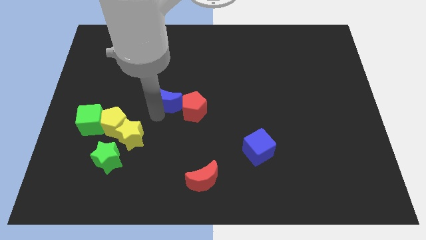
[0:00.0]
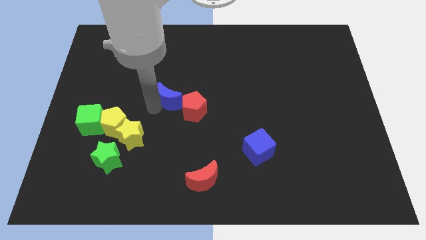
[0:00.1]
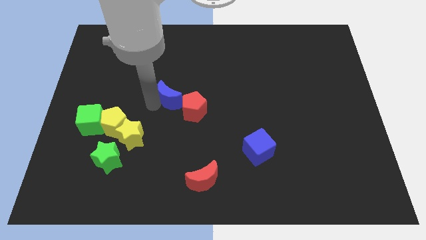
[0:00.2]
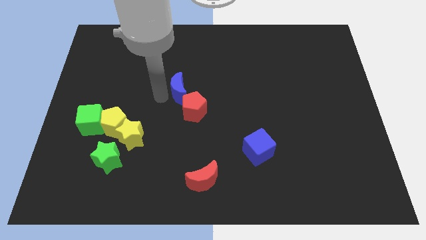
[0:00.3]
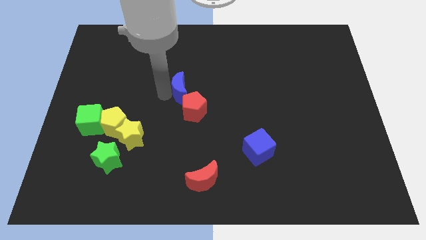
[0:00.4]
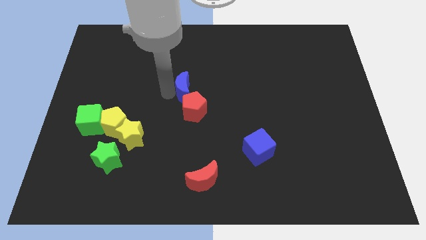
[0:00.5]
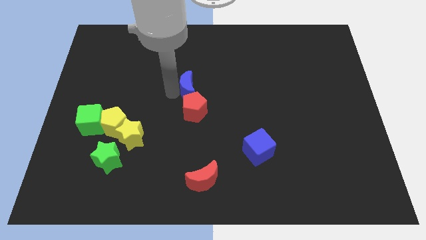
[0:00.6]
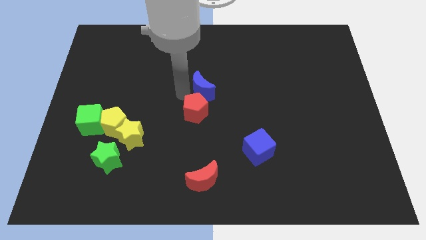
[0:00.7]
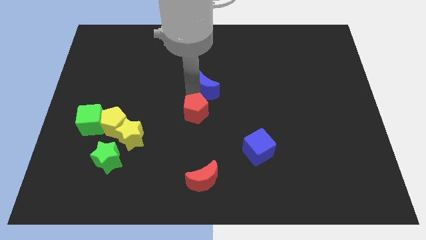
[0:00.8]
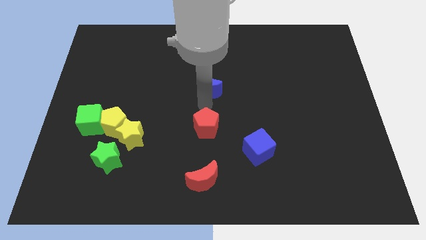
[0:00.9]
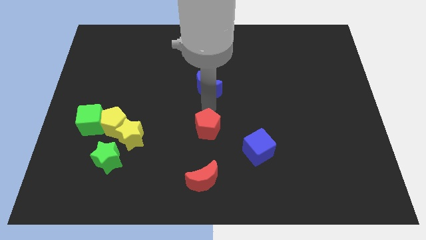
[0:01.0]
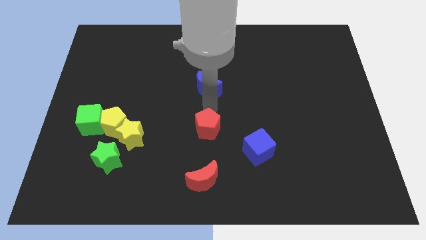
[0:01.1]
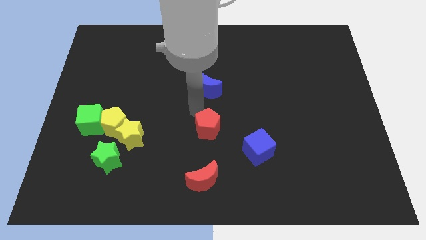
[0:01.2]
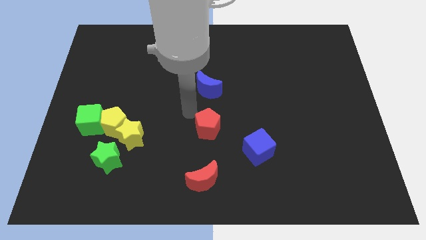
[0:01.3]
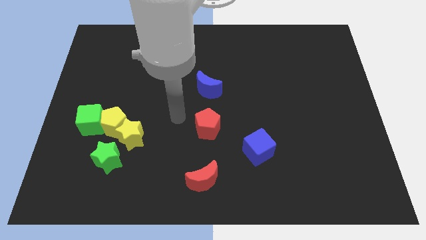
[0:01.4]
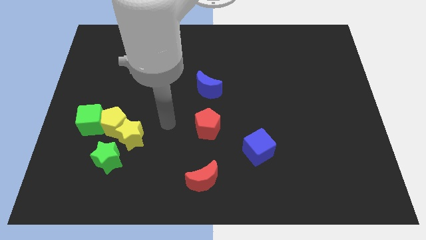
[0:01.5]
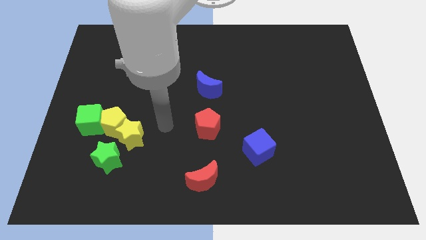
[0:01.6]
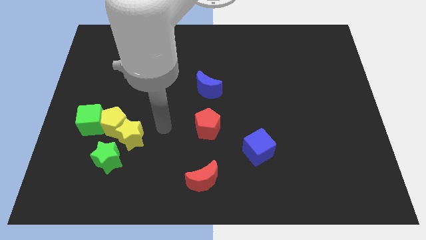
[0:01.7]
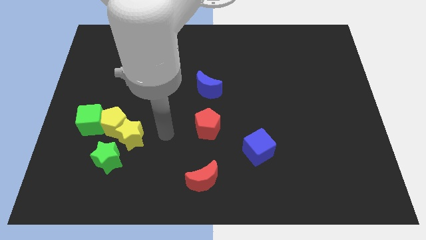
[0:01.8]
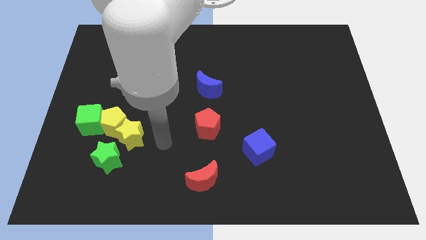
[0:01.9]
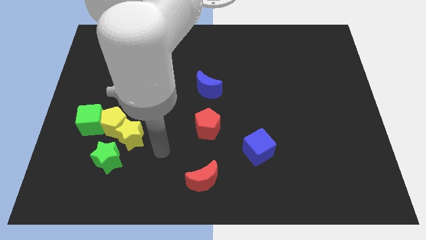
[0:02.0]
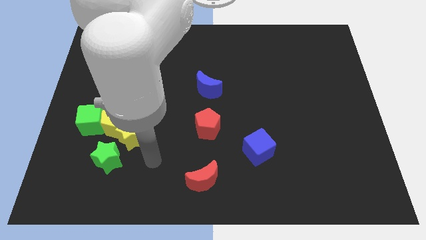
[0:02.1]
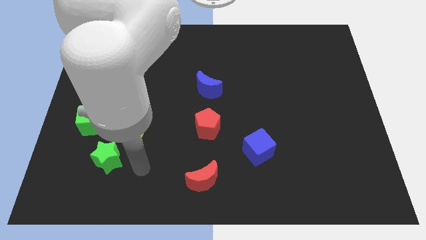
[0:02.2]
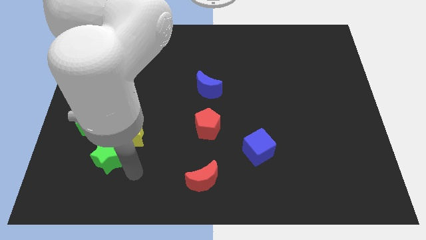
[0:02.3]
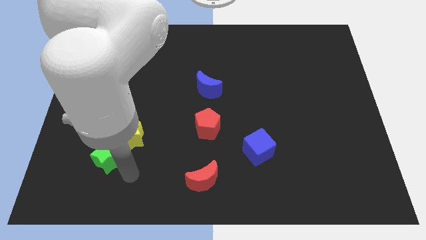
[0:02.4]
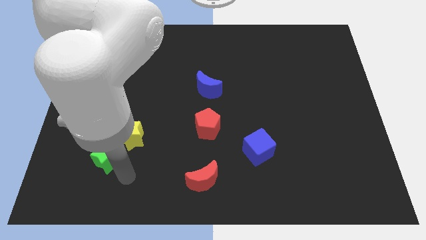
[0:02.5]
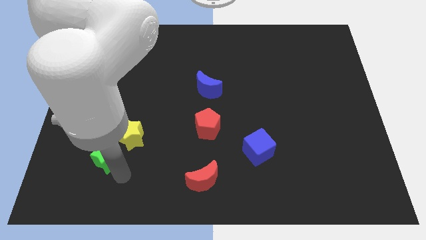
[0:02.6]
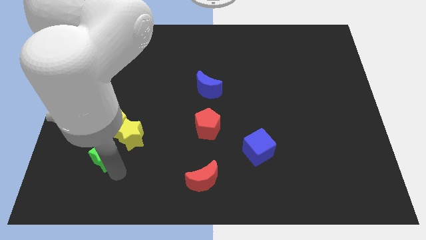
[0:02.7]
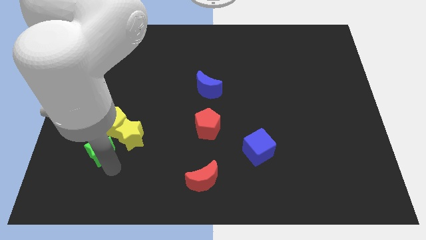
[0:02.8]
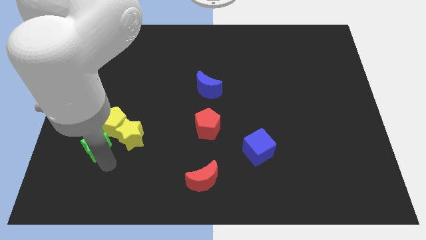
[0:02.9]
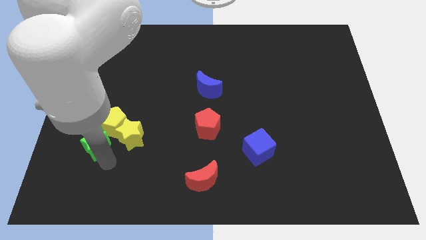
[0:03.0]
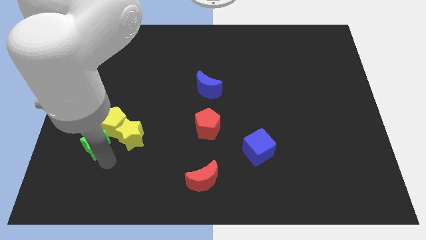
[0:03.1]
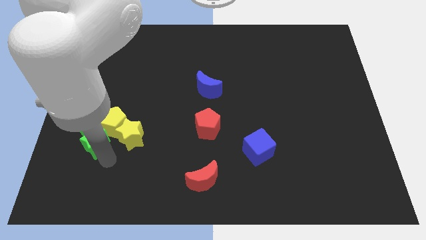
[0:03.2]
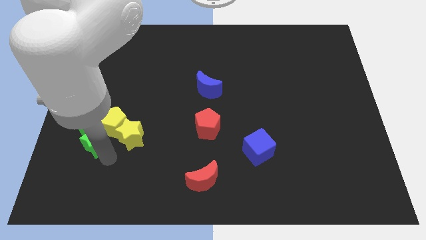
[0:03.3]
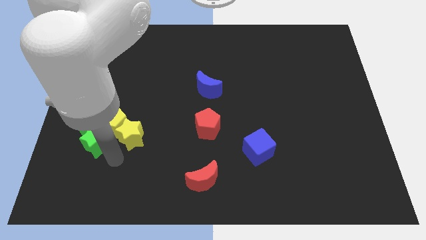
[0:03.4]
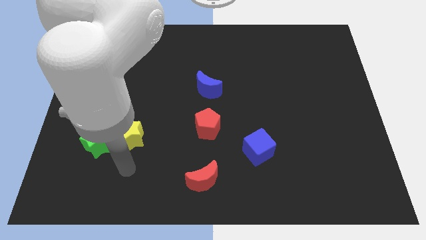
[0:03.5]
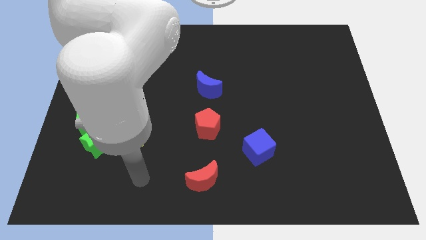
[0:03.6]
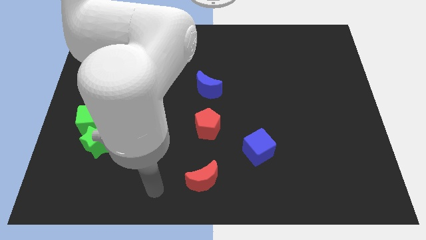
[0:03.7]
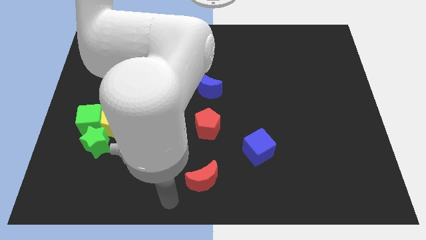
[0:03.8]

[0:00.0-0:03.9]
place the blue moon vertically above the red pentagon

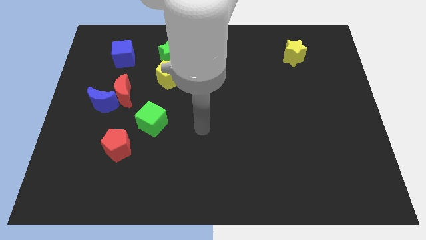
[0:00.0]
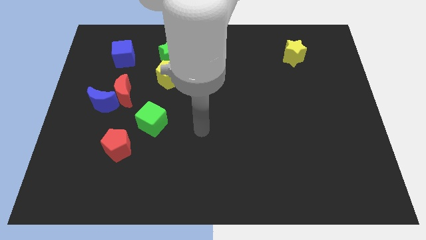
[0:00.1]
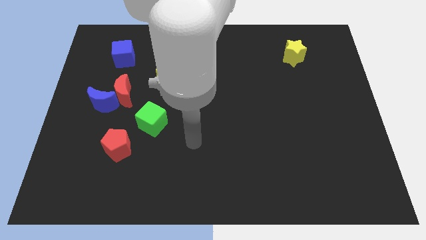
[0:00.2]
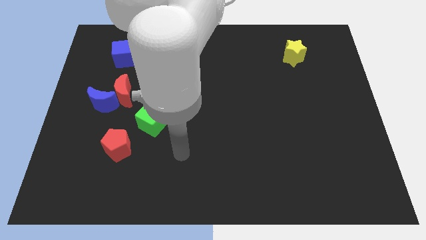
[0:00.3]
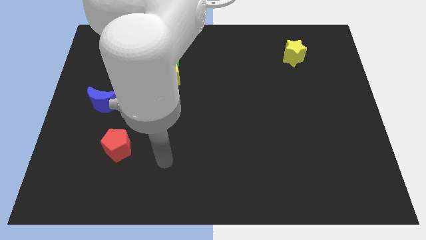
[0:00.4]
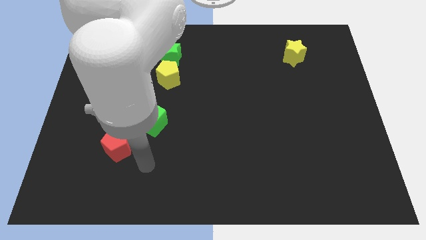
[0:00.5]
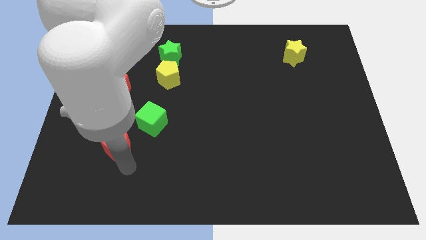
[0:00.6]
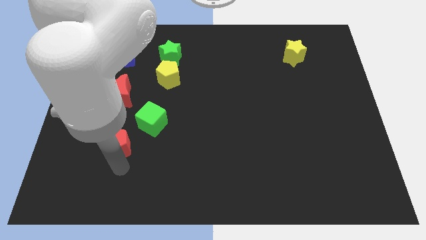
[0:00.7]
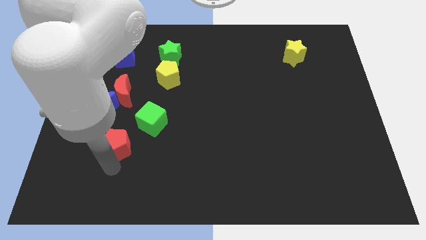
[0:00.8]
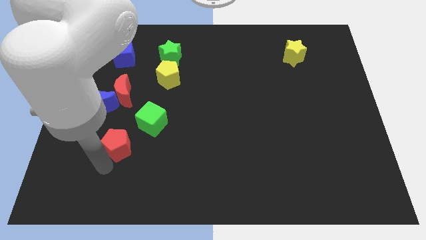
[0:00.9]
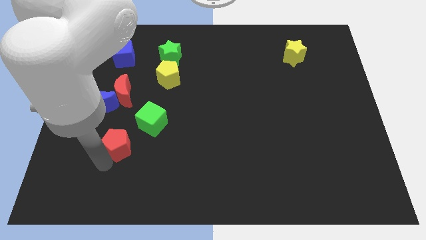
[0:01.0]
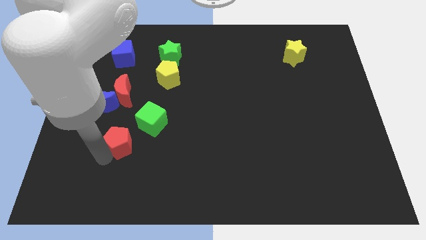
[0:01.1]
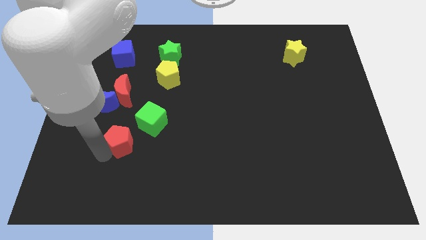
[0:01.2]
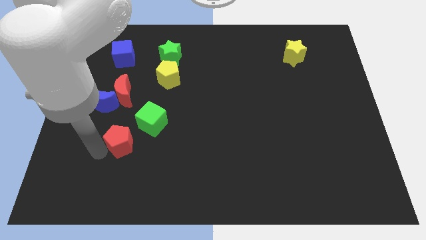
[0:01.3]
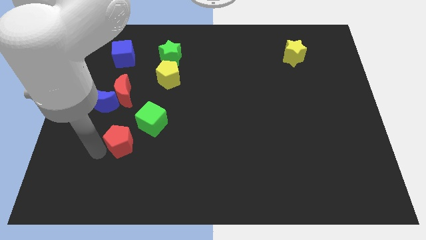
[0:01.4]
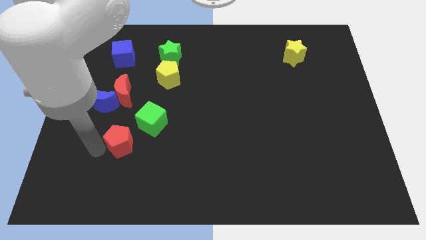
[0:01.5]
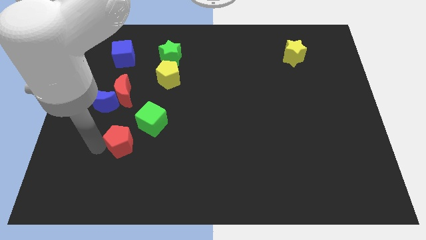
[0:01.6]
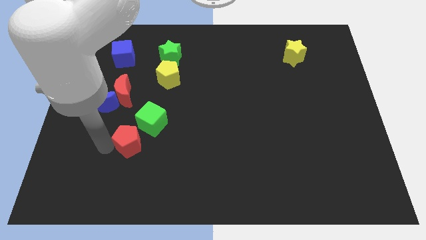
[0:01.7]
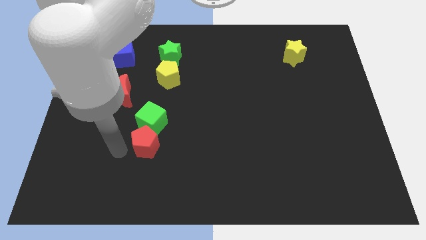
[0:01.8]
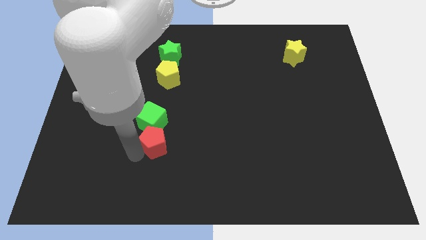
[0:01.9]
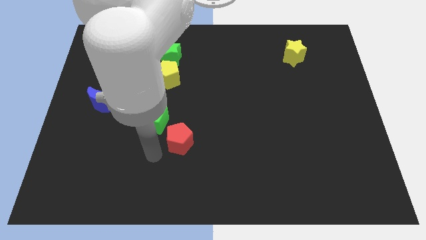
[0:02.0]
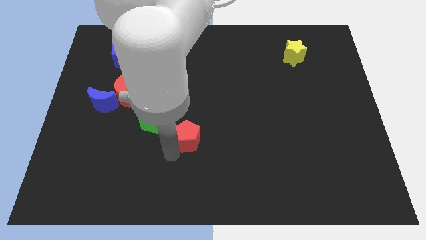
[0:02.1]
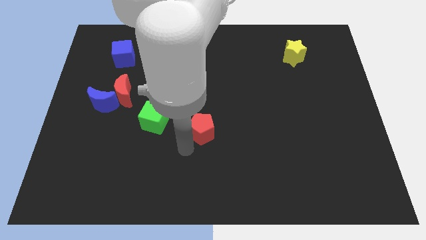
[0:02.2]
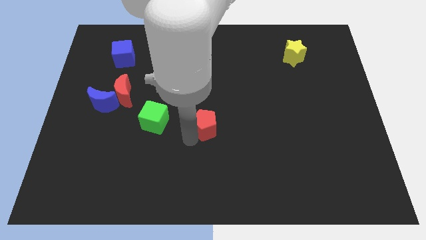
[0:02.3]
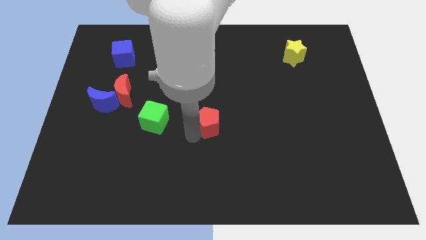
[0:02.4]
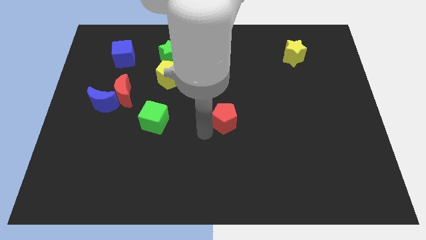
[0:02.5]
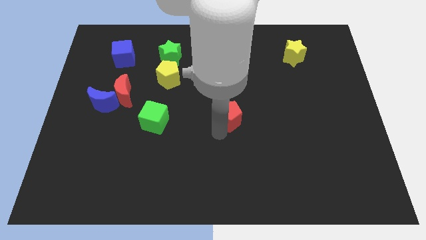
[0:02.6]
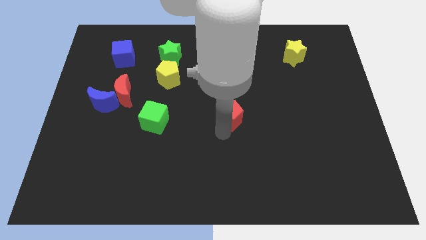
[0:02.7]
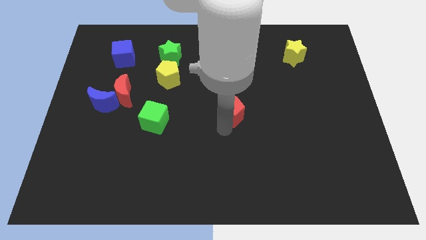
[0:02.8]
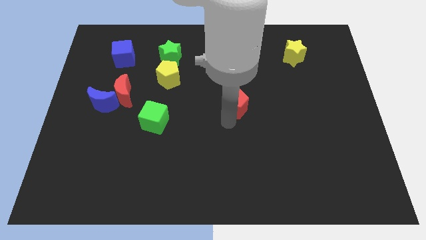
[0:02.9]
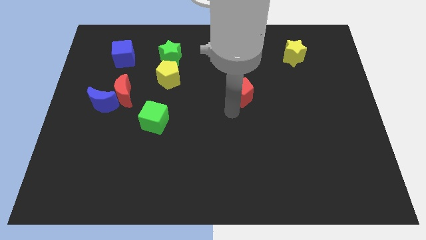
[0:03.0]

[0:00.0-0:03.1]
move red pentagon towards the center of the board

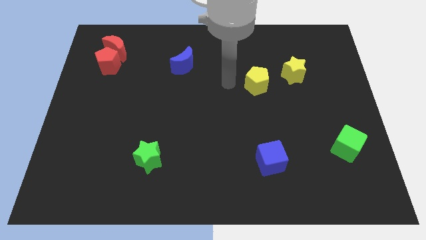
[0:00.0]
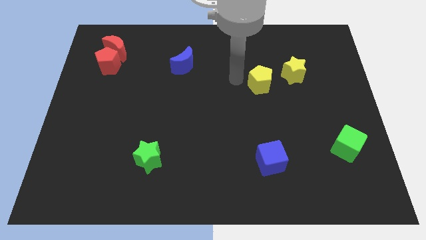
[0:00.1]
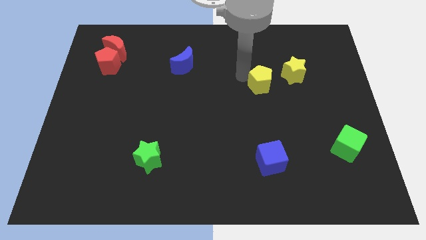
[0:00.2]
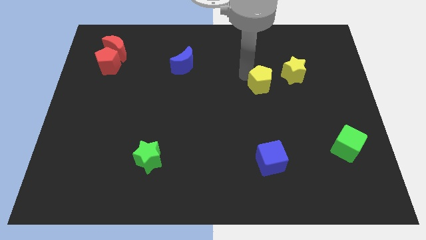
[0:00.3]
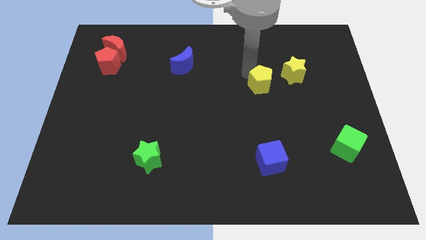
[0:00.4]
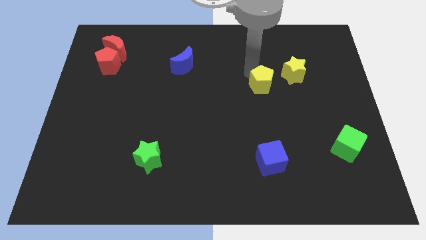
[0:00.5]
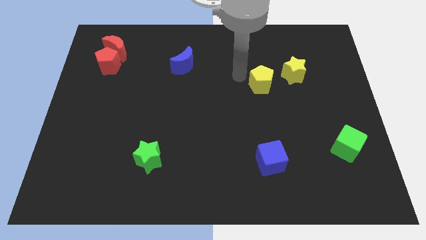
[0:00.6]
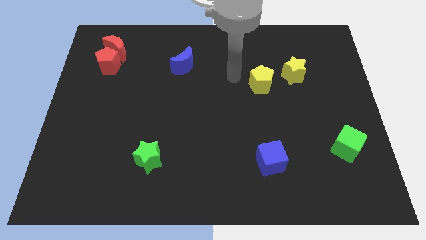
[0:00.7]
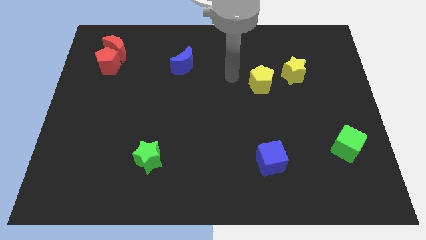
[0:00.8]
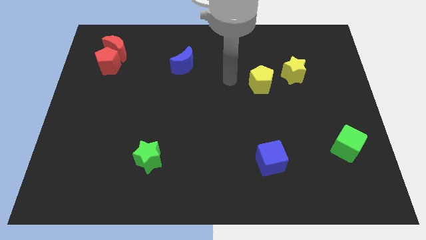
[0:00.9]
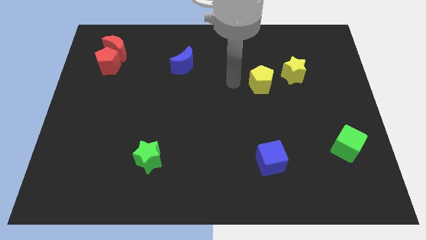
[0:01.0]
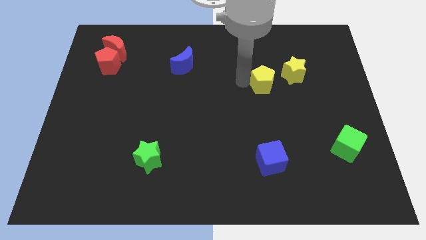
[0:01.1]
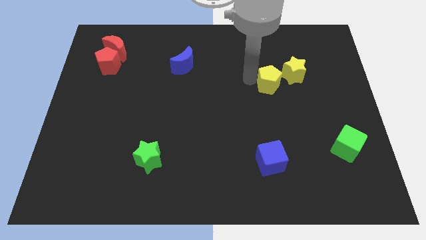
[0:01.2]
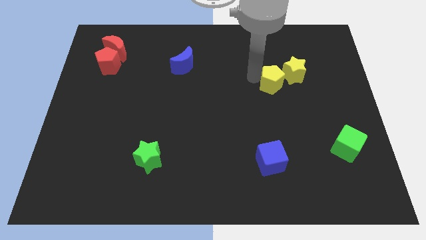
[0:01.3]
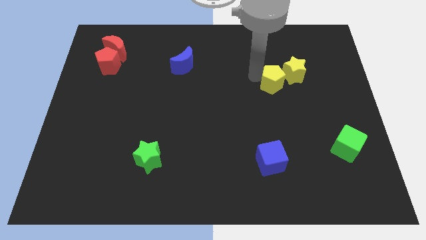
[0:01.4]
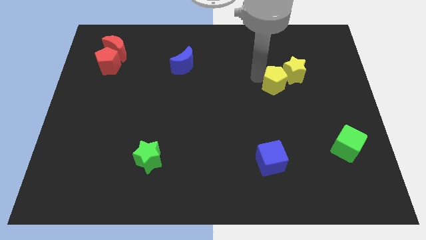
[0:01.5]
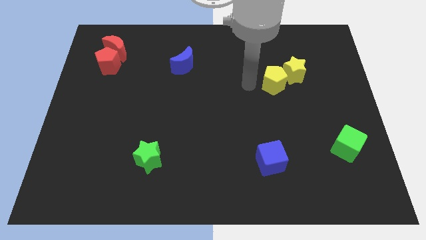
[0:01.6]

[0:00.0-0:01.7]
move the yellow pentagon to the left of the yellow star

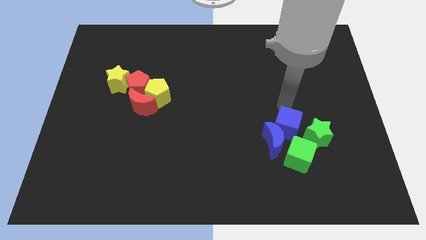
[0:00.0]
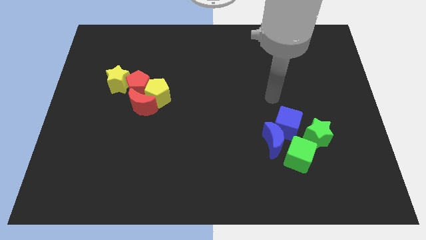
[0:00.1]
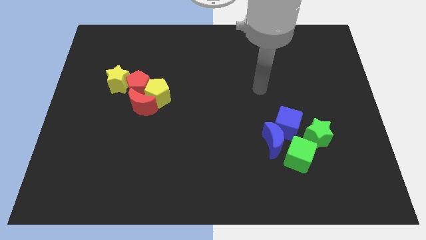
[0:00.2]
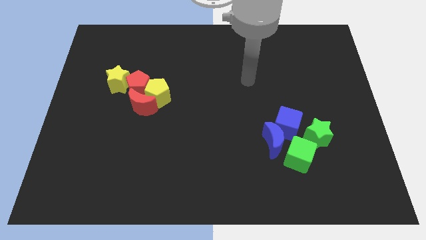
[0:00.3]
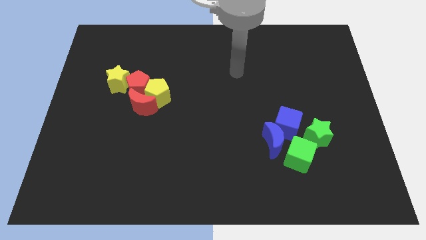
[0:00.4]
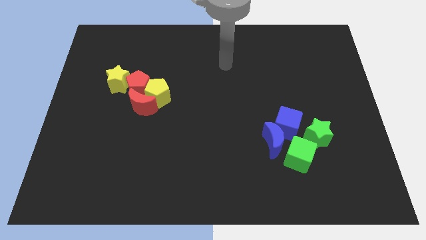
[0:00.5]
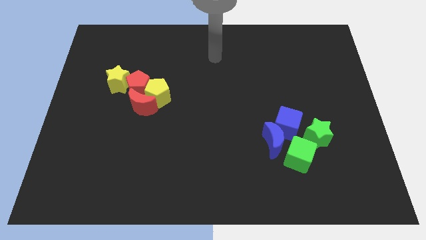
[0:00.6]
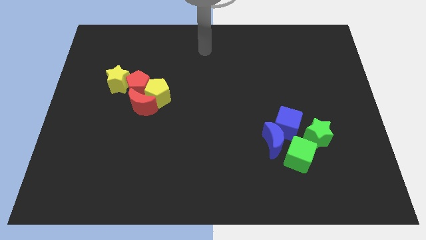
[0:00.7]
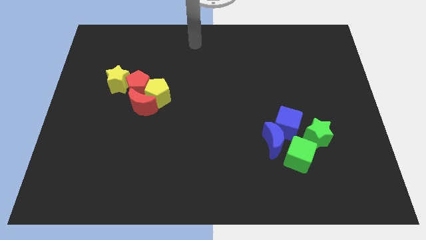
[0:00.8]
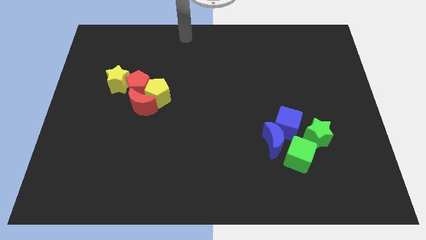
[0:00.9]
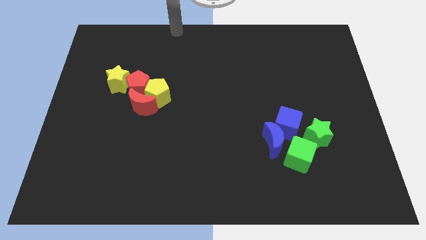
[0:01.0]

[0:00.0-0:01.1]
point your arm at the top center of the board
